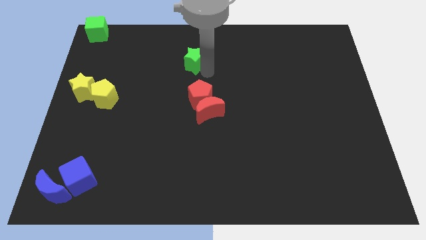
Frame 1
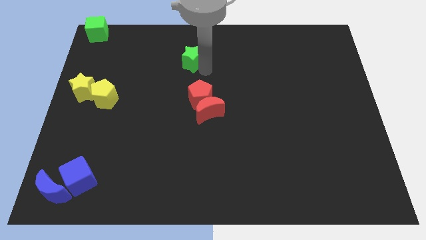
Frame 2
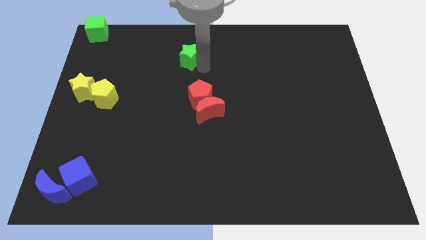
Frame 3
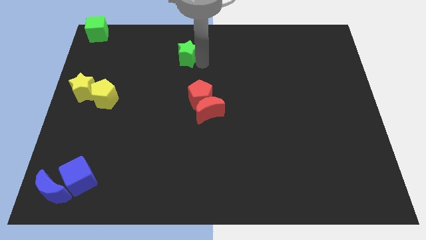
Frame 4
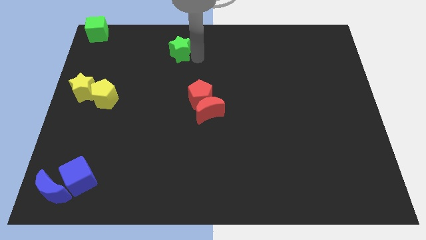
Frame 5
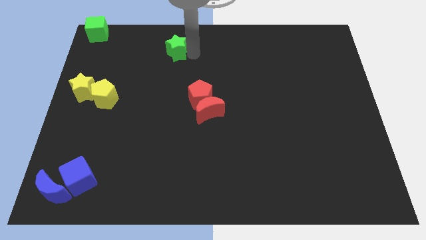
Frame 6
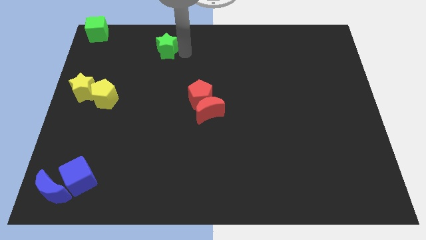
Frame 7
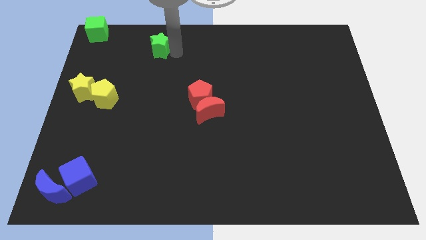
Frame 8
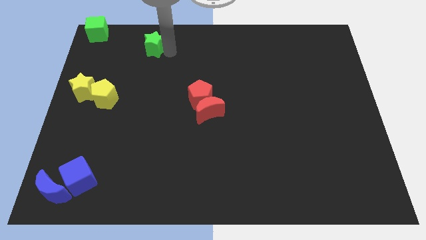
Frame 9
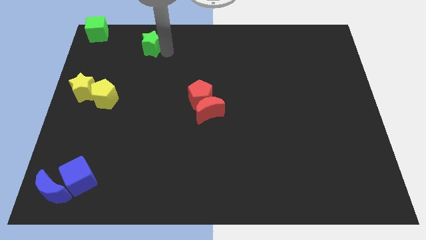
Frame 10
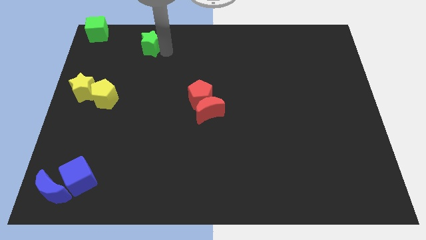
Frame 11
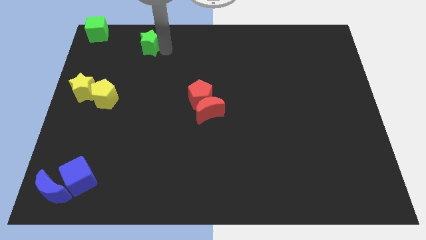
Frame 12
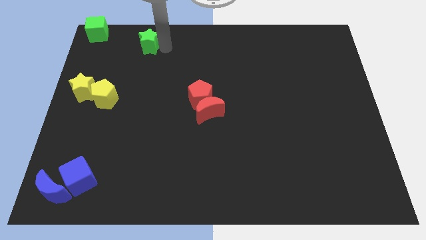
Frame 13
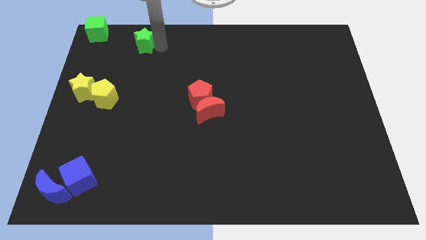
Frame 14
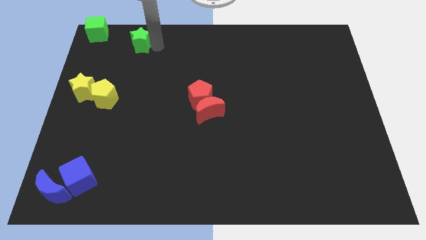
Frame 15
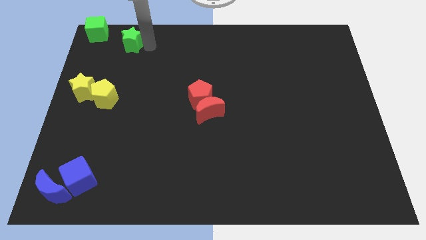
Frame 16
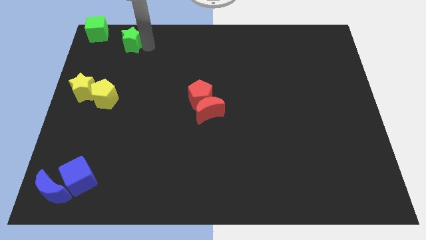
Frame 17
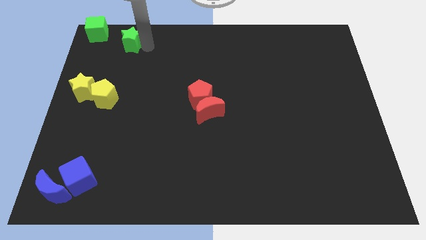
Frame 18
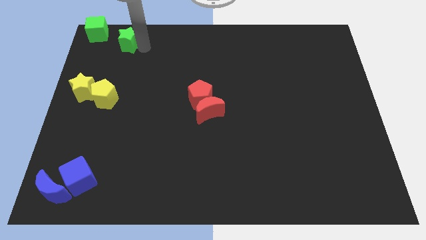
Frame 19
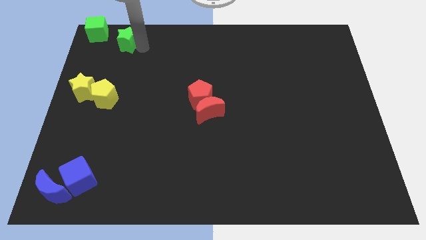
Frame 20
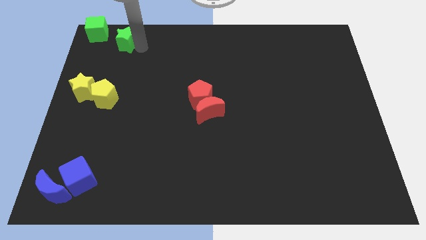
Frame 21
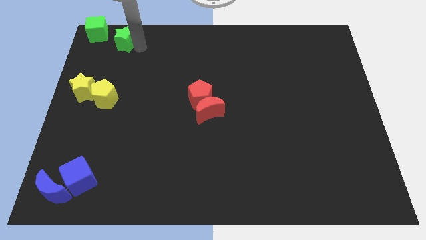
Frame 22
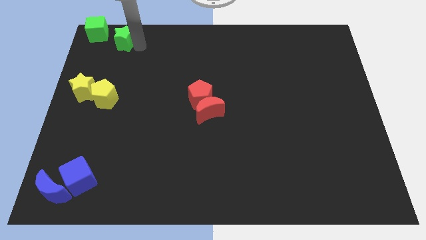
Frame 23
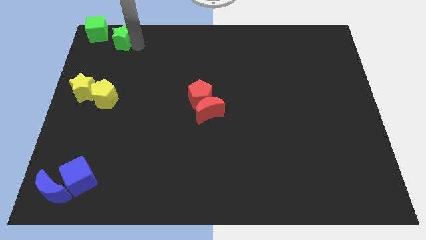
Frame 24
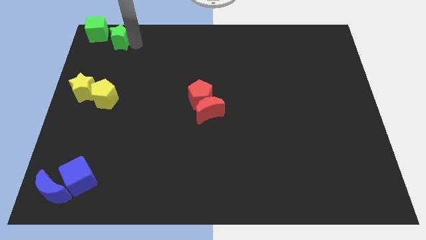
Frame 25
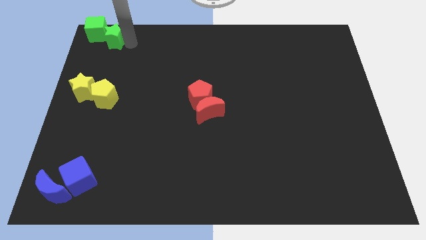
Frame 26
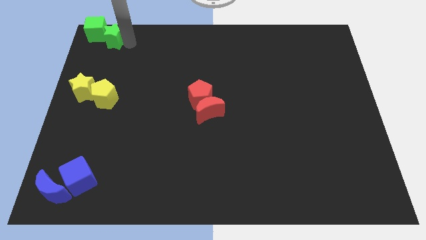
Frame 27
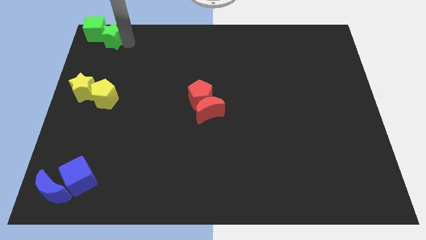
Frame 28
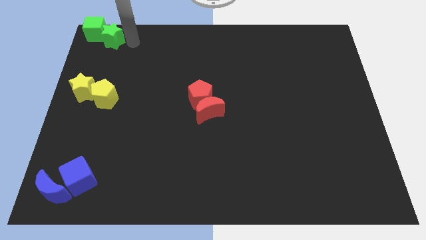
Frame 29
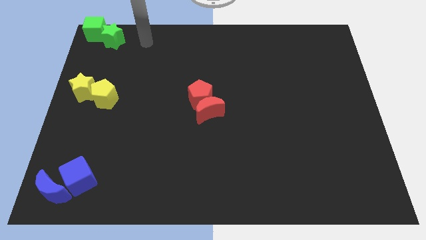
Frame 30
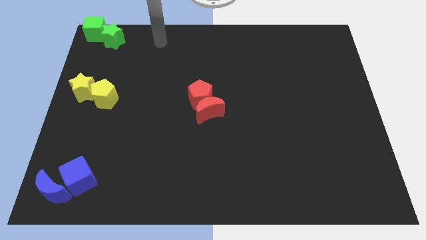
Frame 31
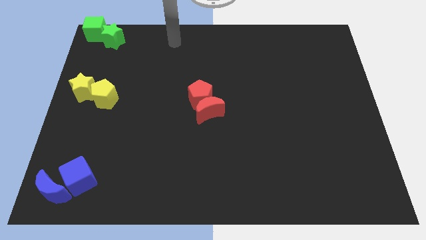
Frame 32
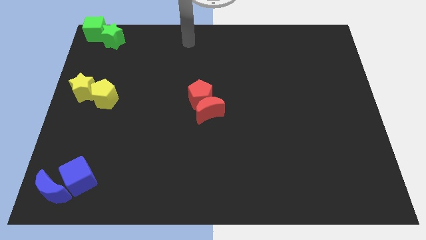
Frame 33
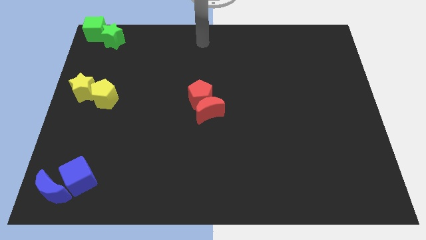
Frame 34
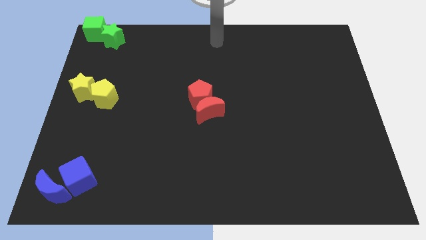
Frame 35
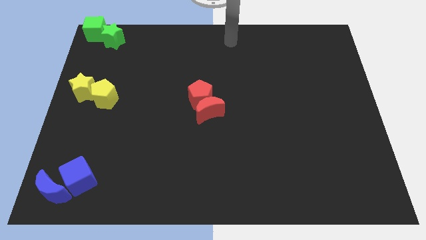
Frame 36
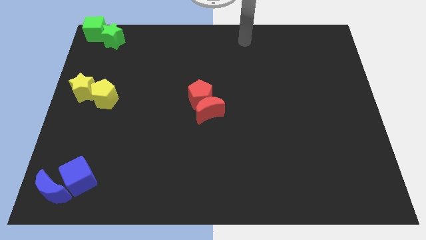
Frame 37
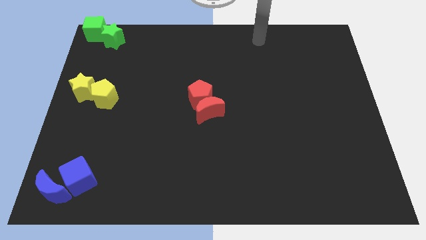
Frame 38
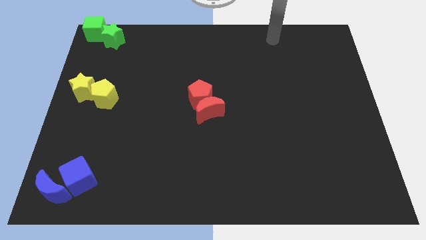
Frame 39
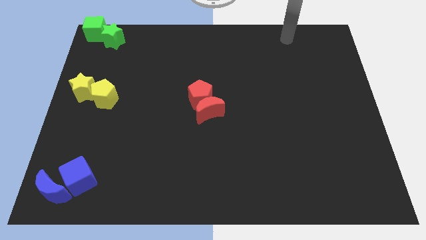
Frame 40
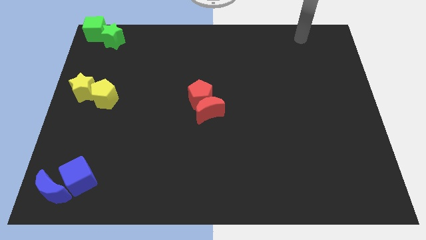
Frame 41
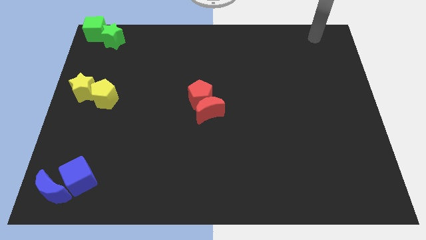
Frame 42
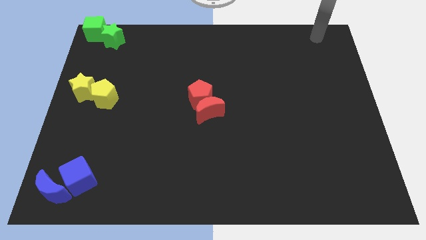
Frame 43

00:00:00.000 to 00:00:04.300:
push the green star into the green cube

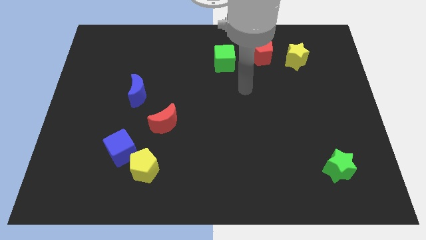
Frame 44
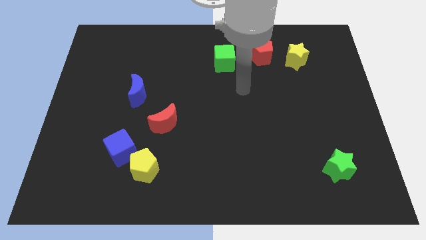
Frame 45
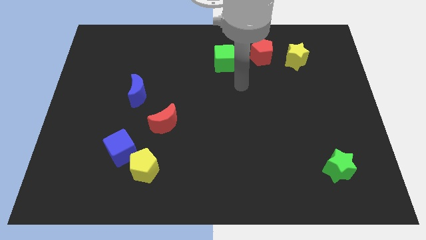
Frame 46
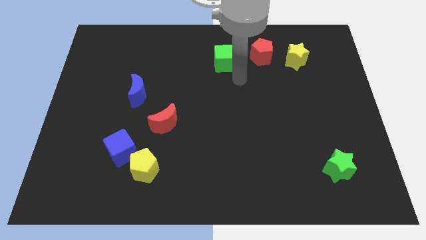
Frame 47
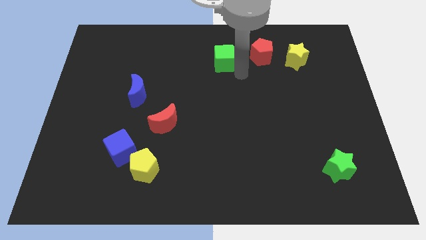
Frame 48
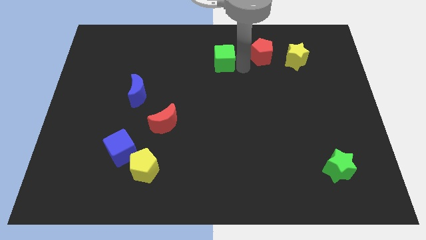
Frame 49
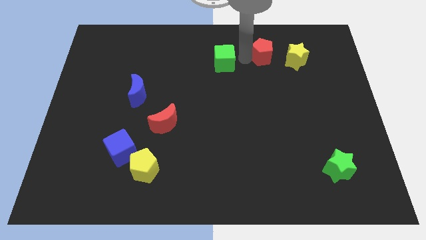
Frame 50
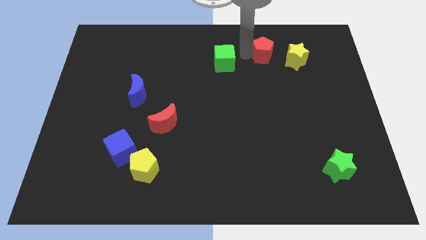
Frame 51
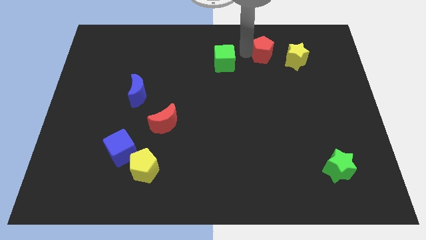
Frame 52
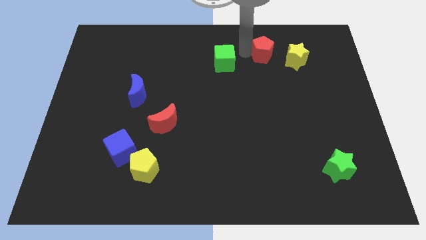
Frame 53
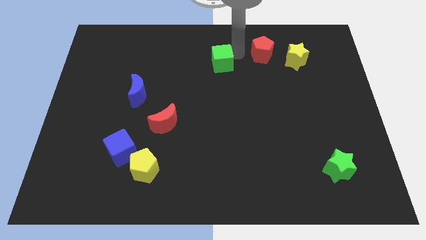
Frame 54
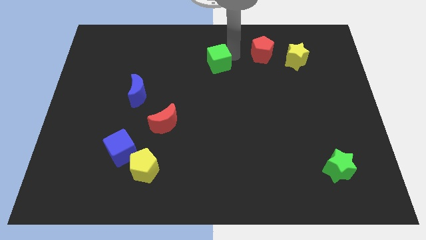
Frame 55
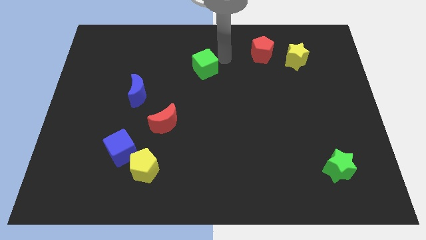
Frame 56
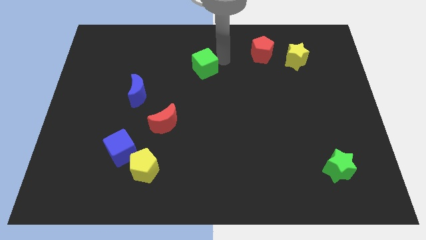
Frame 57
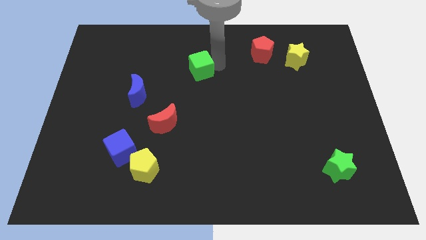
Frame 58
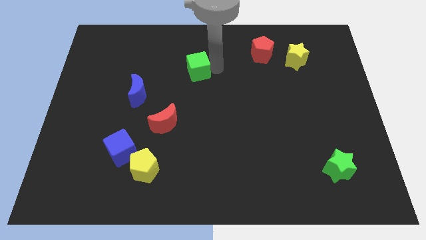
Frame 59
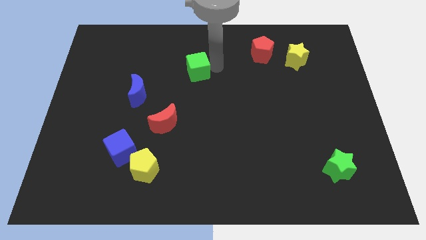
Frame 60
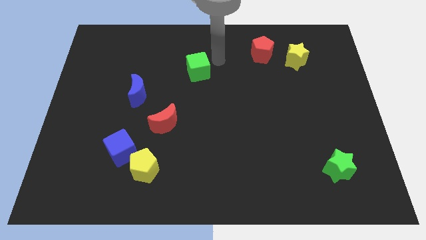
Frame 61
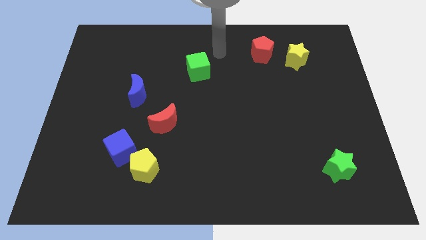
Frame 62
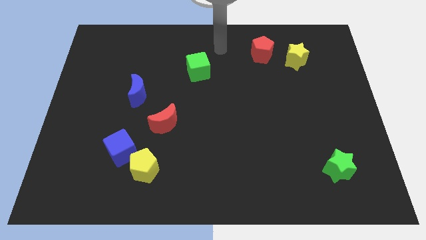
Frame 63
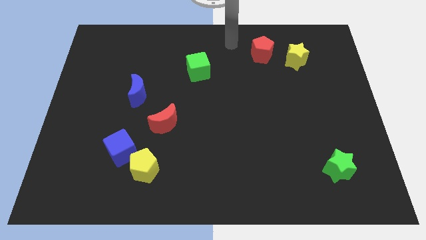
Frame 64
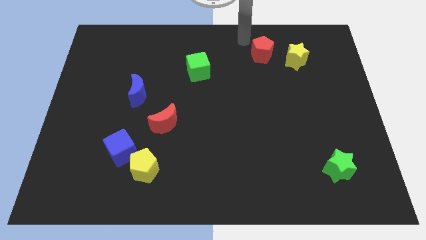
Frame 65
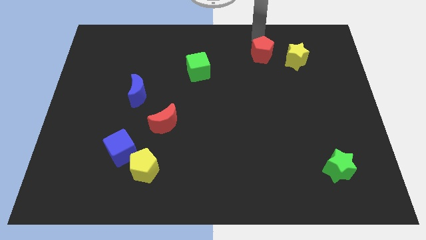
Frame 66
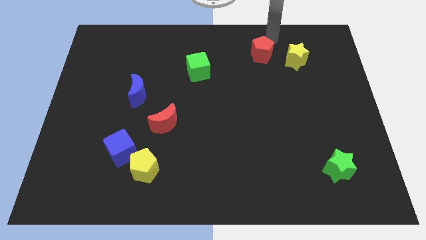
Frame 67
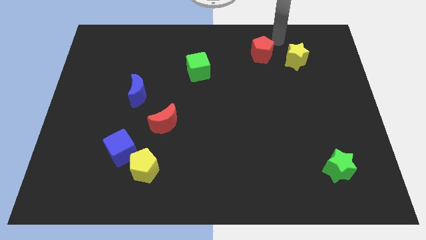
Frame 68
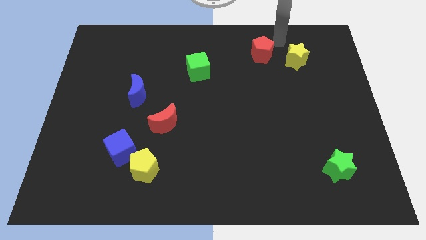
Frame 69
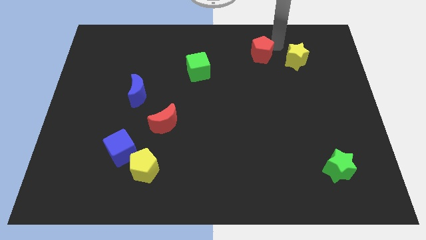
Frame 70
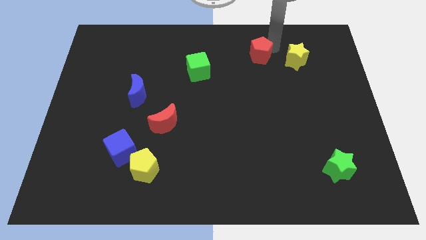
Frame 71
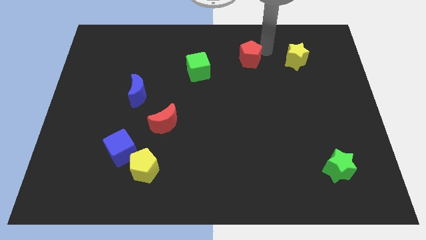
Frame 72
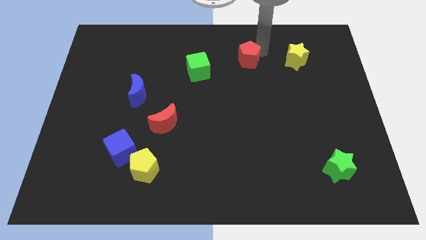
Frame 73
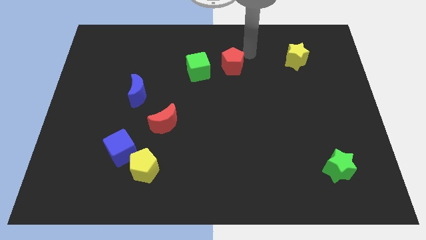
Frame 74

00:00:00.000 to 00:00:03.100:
move the green block slightly towards the left side of the board

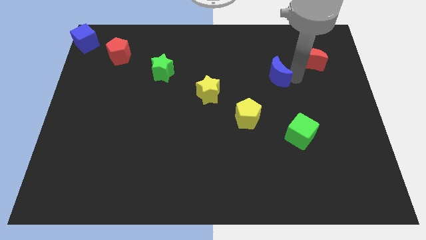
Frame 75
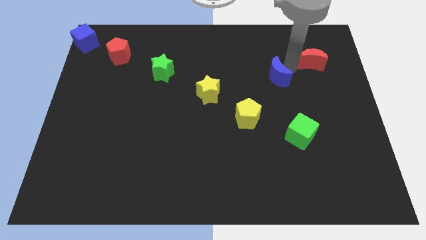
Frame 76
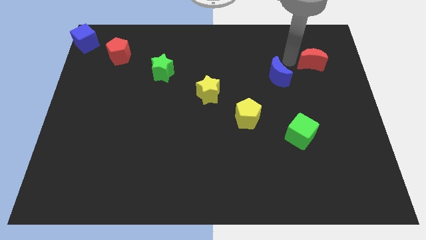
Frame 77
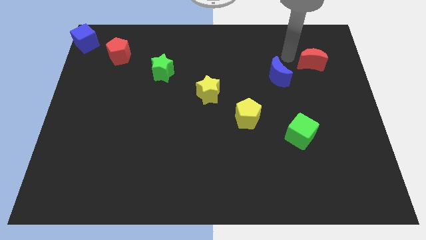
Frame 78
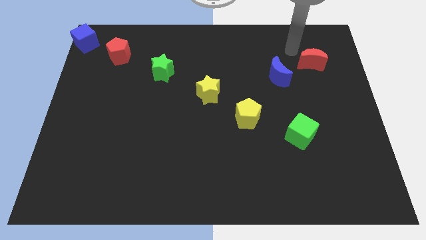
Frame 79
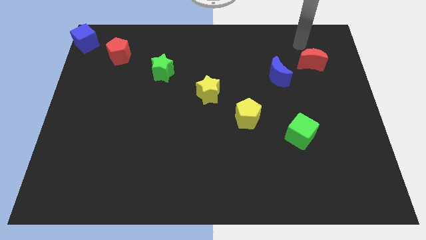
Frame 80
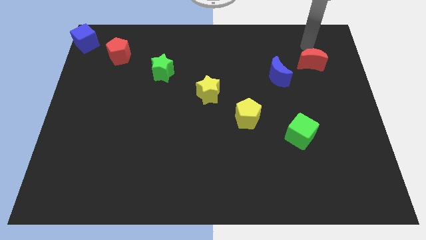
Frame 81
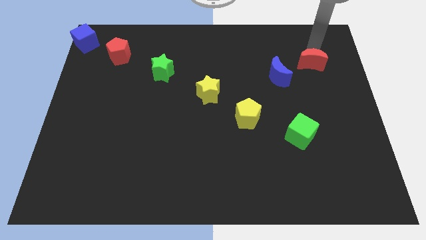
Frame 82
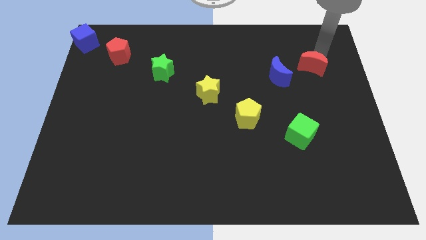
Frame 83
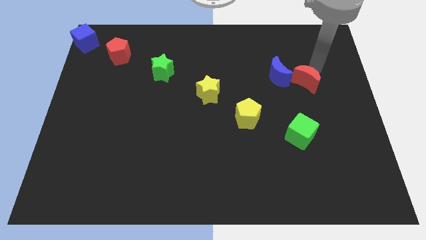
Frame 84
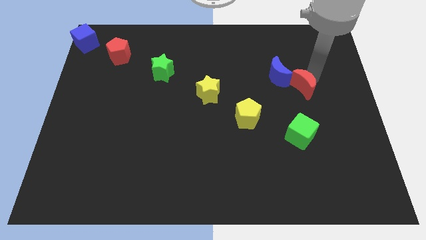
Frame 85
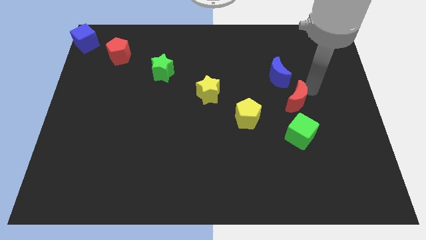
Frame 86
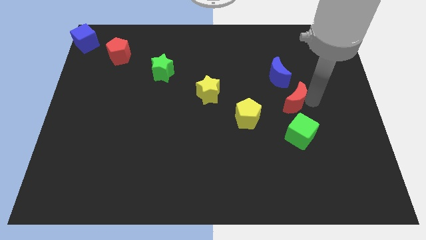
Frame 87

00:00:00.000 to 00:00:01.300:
put the red crescent in between the blue crescent and green cube

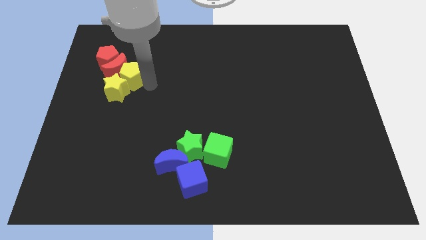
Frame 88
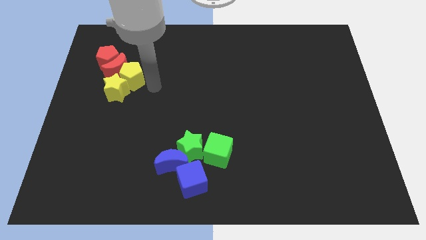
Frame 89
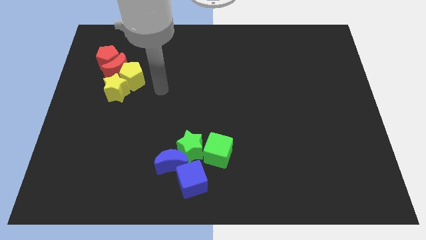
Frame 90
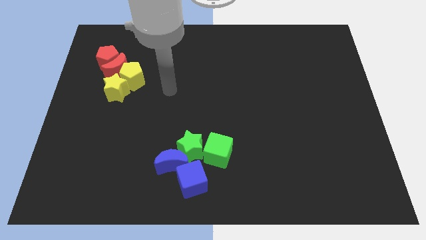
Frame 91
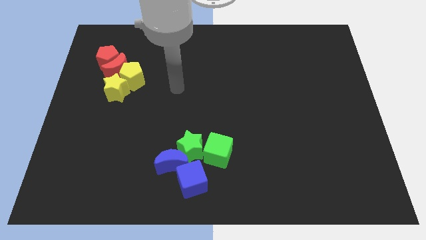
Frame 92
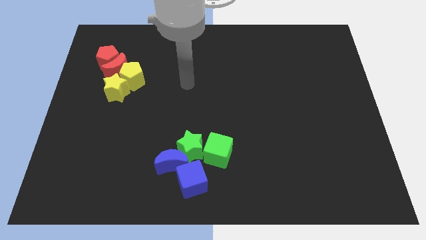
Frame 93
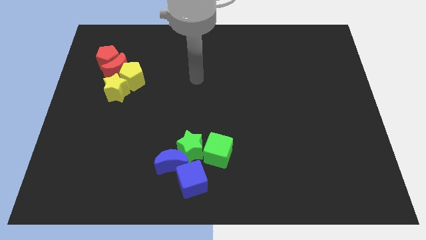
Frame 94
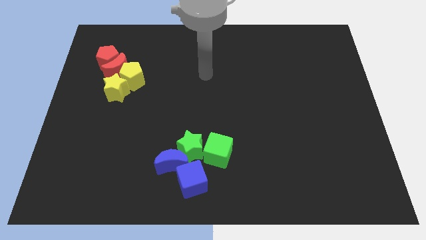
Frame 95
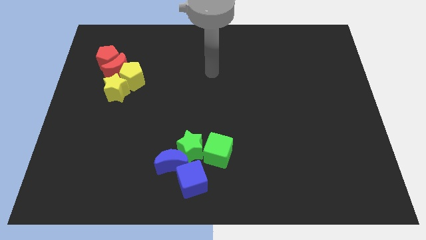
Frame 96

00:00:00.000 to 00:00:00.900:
move your arm away from yellow pentagon
